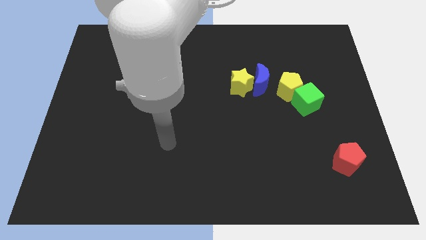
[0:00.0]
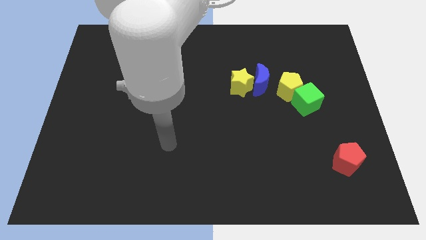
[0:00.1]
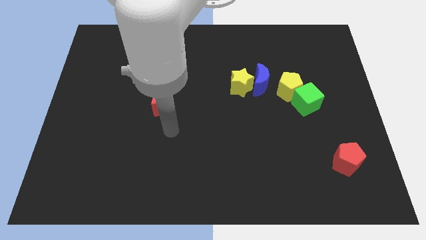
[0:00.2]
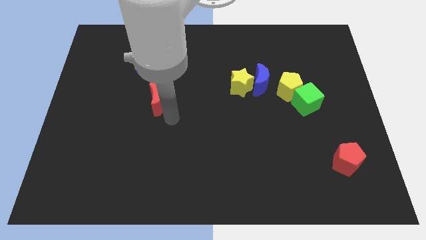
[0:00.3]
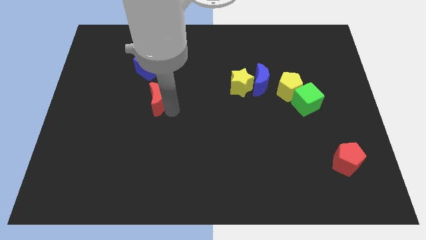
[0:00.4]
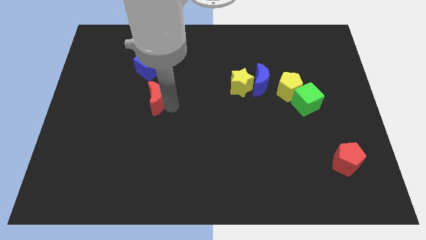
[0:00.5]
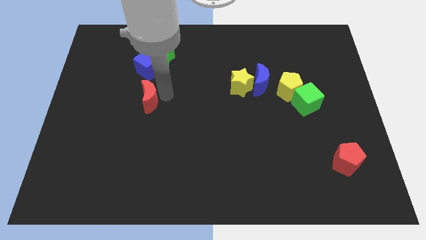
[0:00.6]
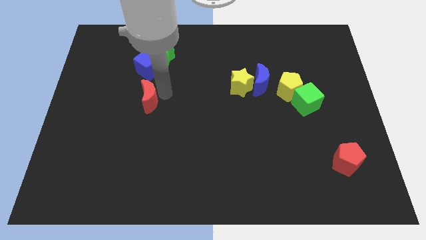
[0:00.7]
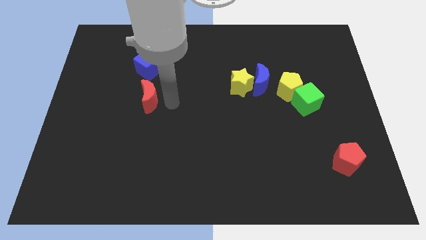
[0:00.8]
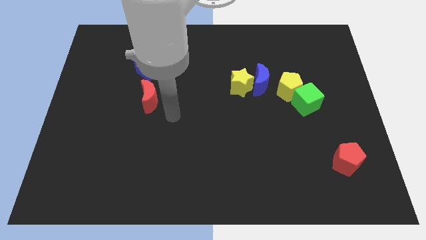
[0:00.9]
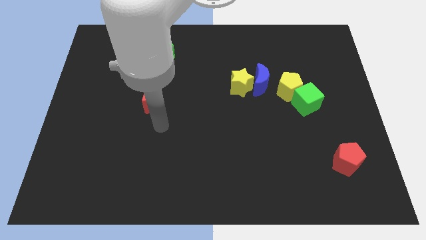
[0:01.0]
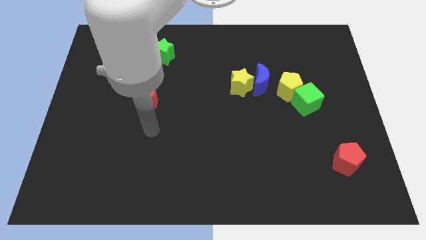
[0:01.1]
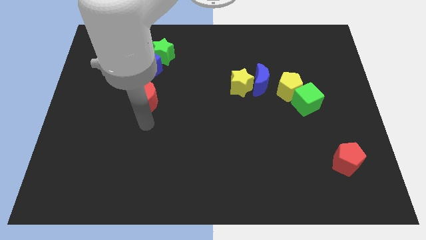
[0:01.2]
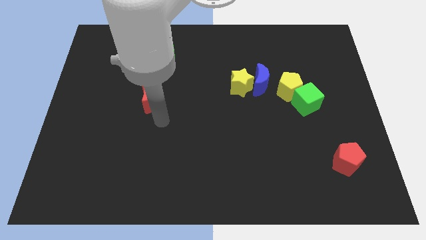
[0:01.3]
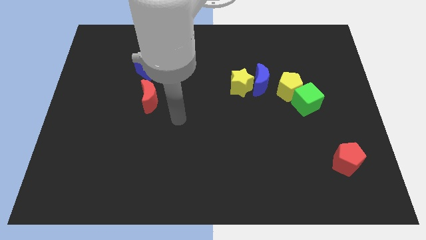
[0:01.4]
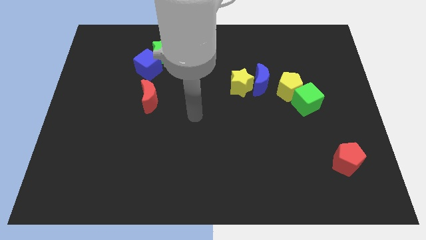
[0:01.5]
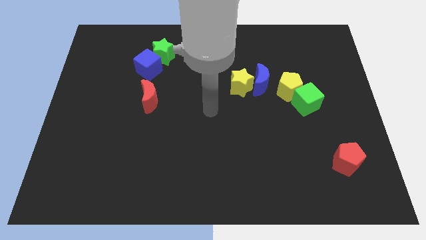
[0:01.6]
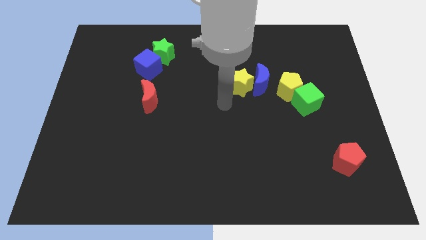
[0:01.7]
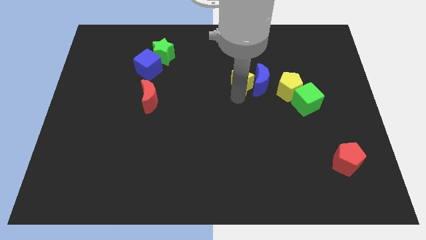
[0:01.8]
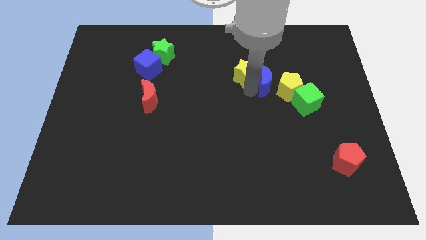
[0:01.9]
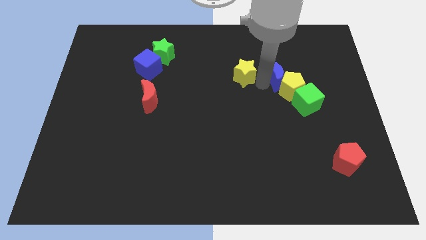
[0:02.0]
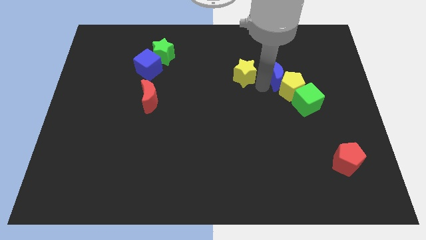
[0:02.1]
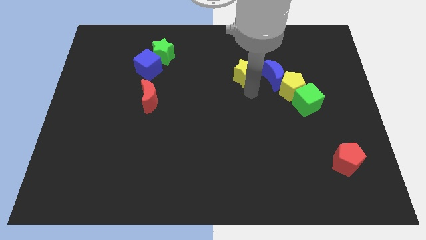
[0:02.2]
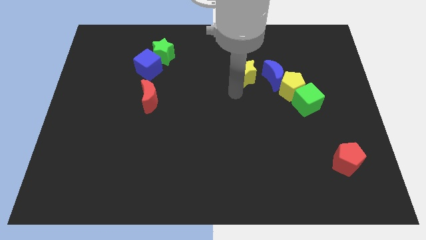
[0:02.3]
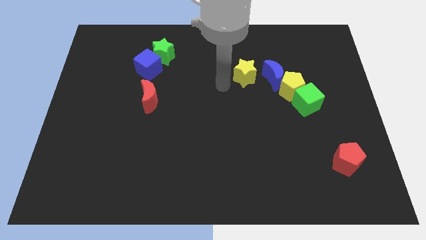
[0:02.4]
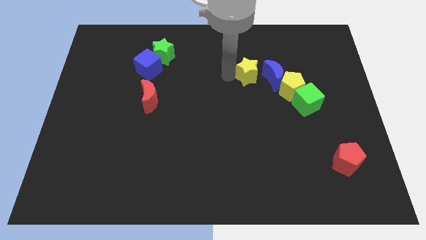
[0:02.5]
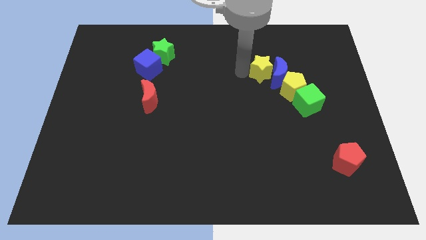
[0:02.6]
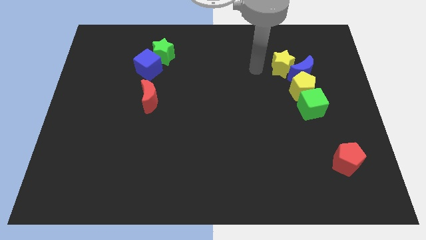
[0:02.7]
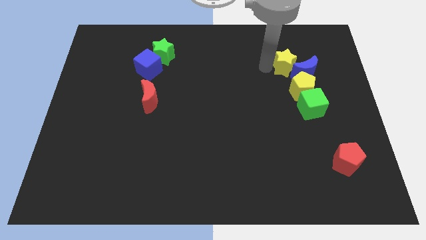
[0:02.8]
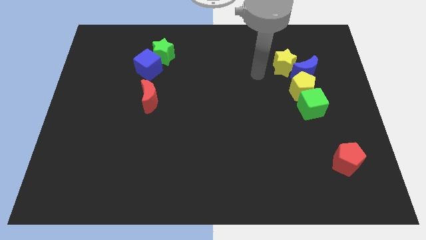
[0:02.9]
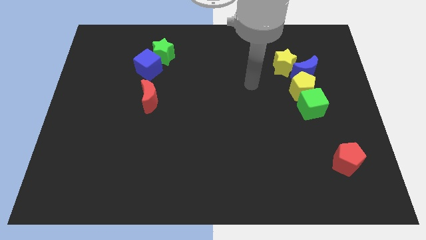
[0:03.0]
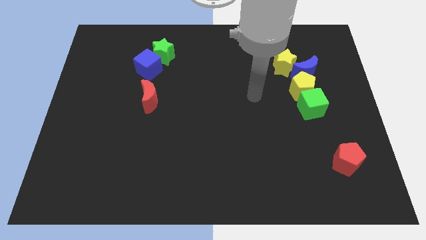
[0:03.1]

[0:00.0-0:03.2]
push the yellow star to the right side

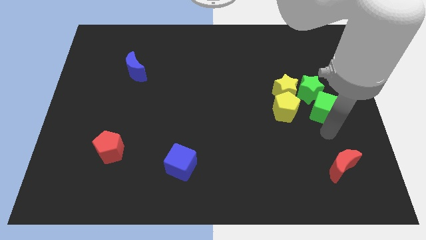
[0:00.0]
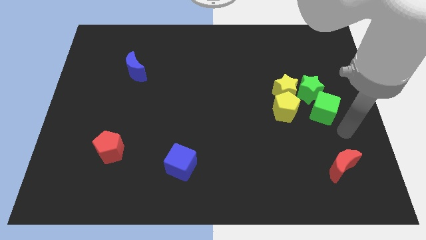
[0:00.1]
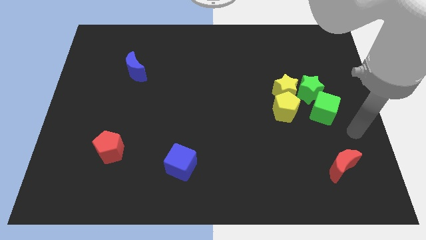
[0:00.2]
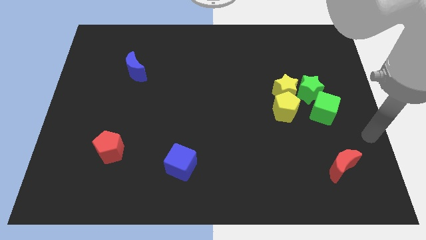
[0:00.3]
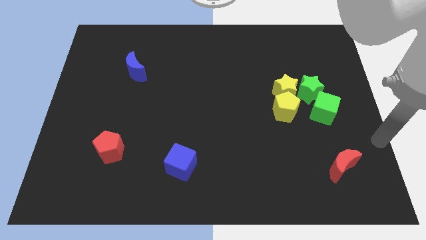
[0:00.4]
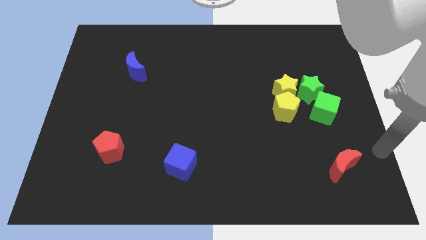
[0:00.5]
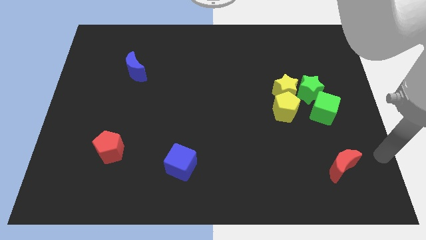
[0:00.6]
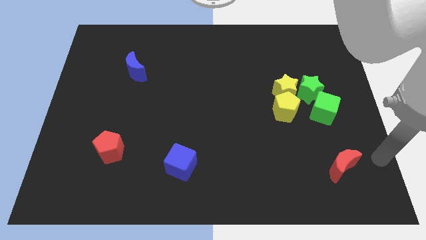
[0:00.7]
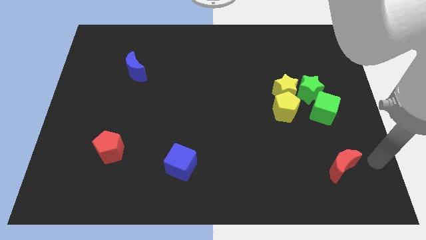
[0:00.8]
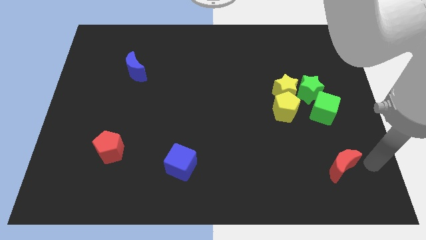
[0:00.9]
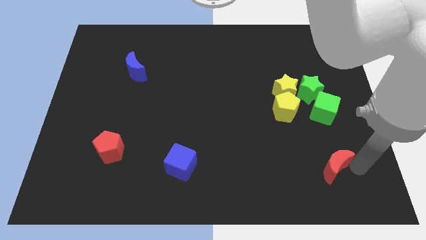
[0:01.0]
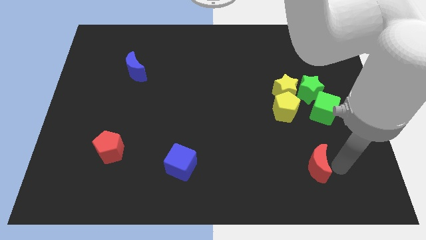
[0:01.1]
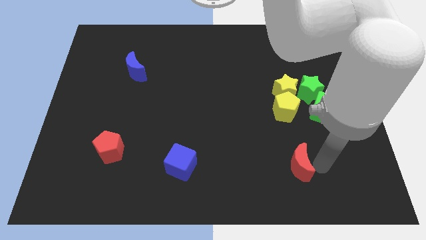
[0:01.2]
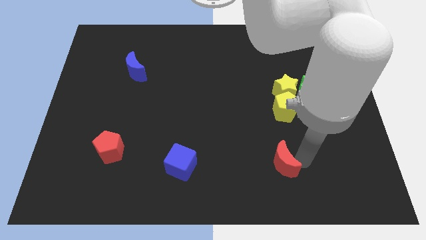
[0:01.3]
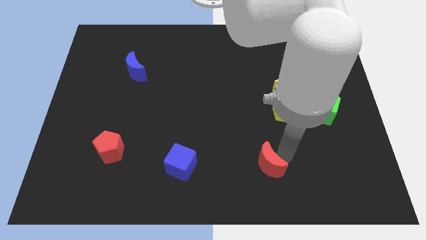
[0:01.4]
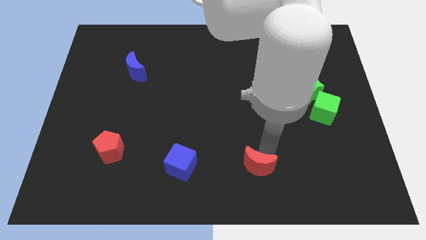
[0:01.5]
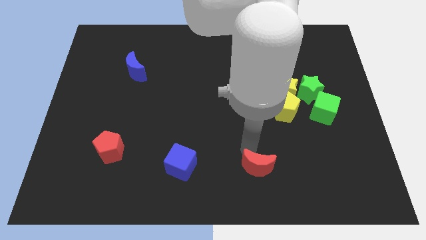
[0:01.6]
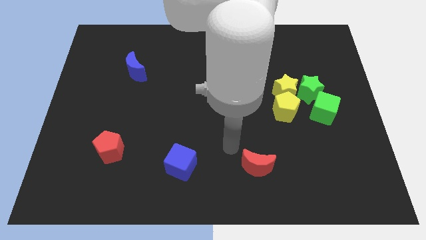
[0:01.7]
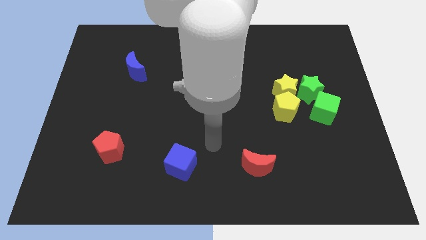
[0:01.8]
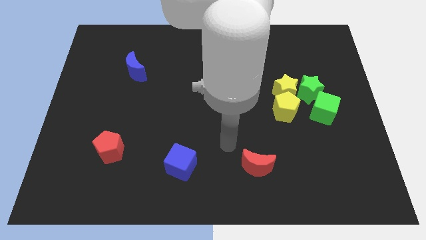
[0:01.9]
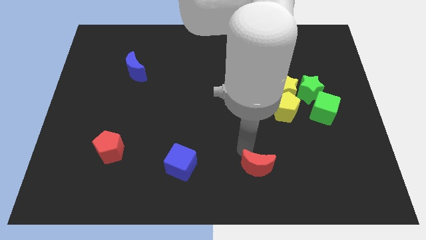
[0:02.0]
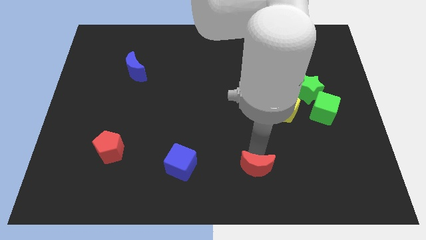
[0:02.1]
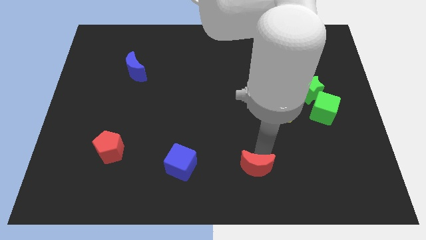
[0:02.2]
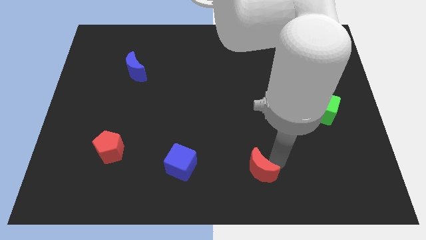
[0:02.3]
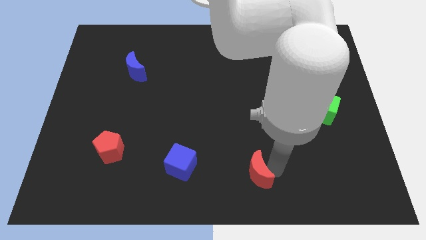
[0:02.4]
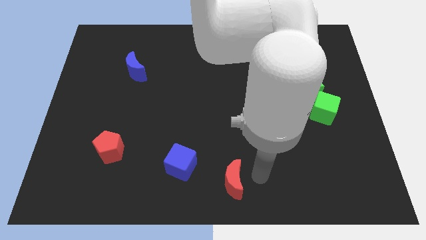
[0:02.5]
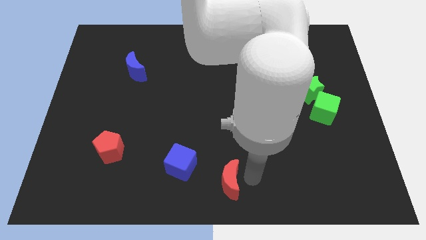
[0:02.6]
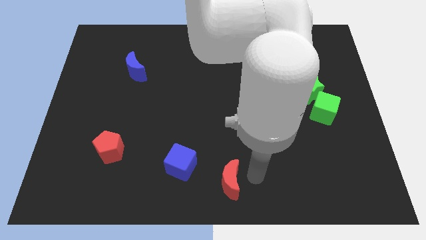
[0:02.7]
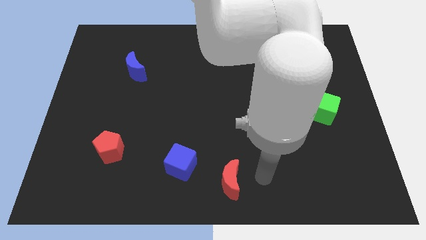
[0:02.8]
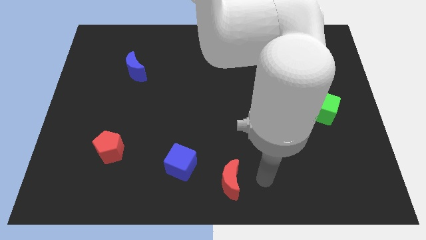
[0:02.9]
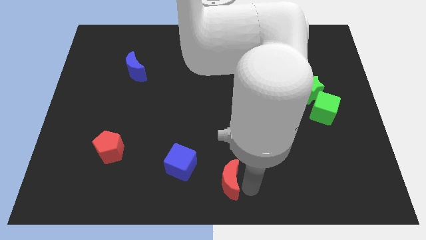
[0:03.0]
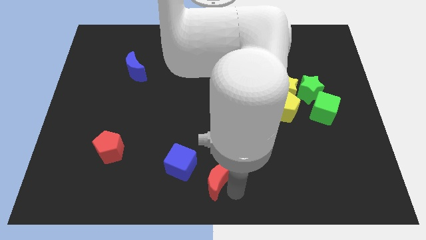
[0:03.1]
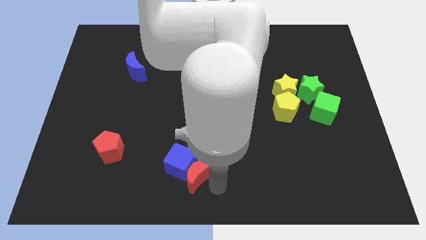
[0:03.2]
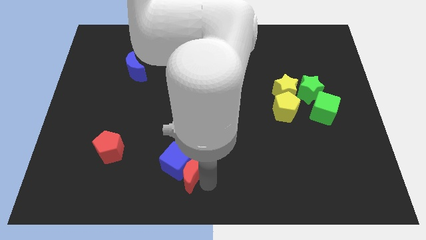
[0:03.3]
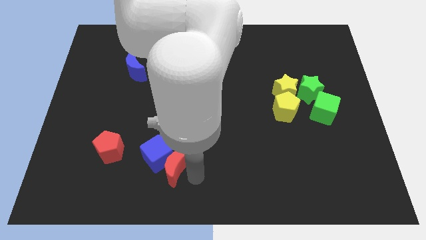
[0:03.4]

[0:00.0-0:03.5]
move the red crescent into the blue cube

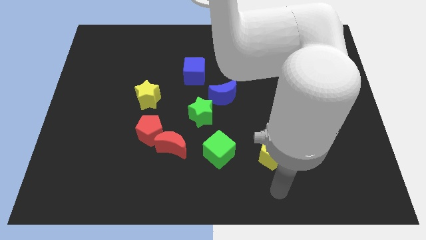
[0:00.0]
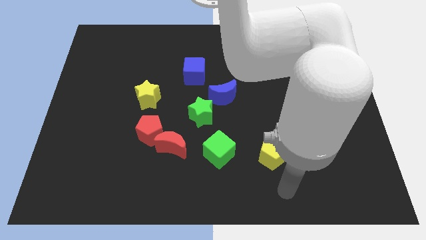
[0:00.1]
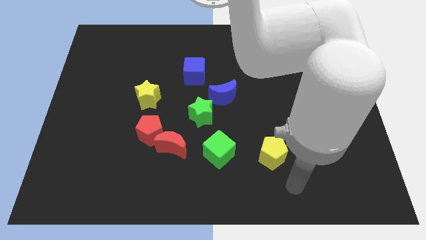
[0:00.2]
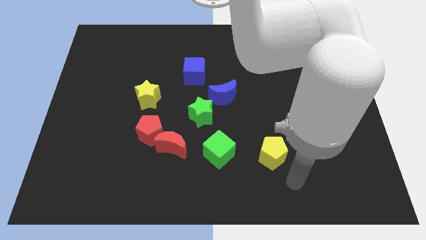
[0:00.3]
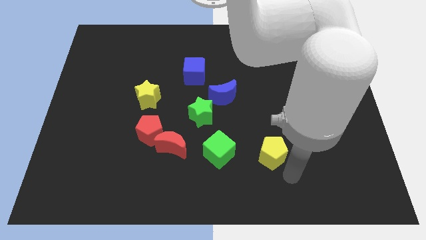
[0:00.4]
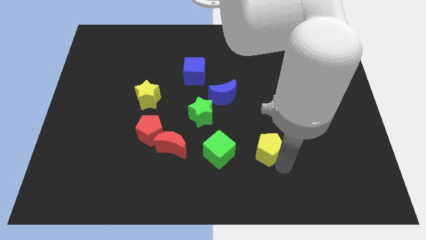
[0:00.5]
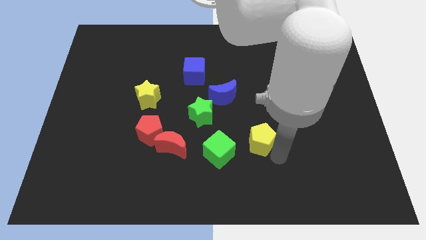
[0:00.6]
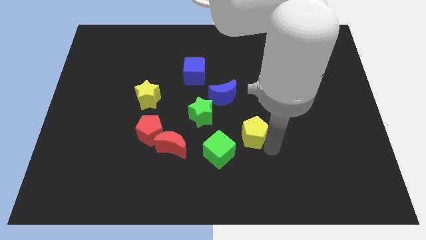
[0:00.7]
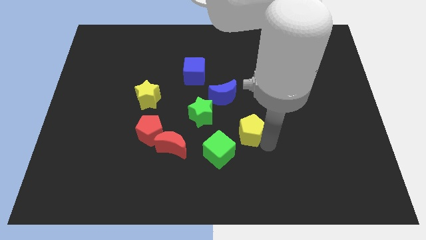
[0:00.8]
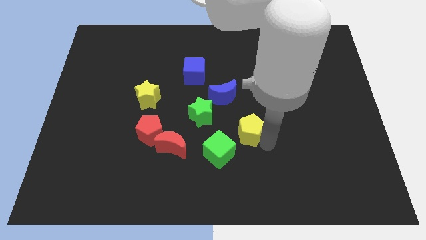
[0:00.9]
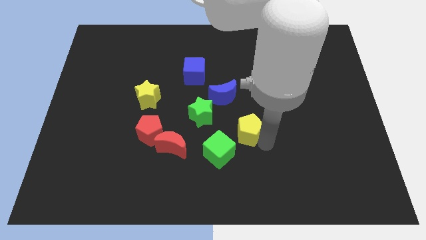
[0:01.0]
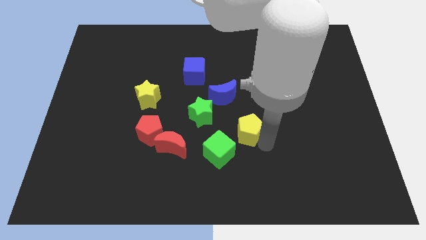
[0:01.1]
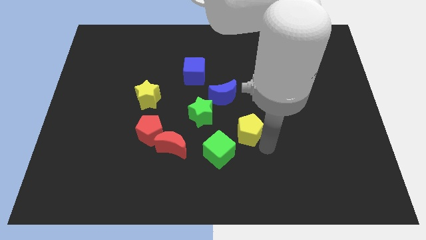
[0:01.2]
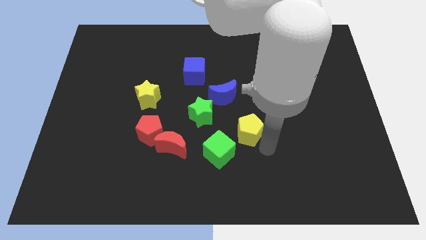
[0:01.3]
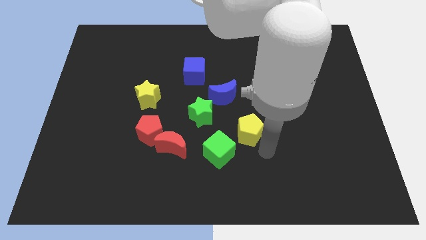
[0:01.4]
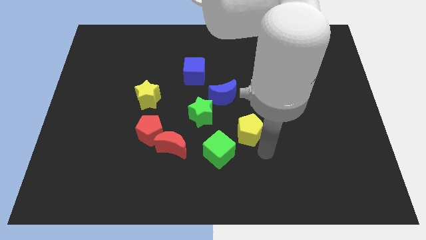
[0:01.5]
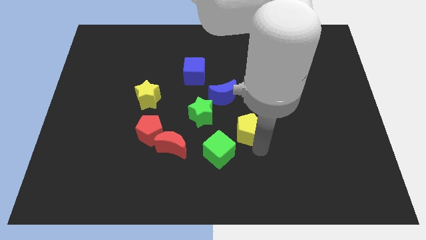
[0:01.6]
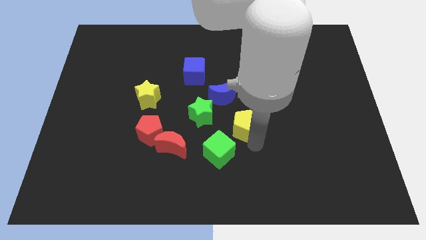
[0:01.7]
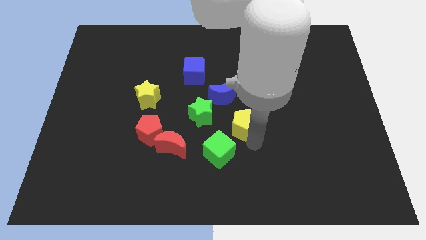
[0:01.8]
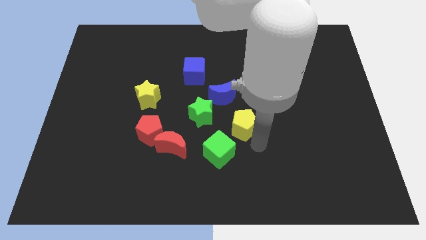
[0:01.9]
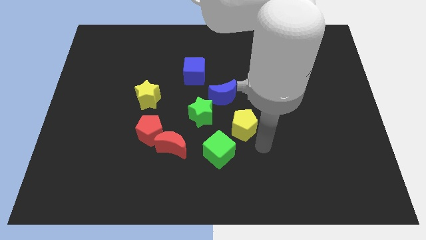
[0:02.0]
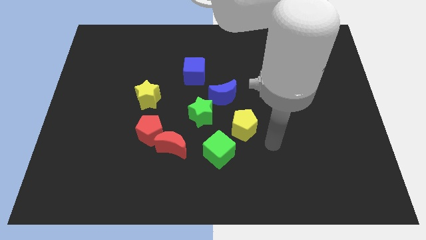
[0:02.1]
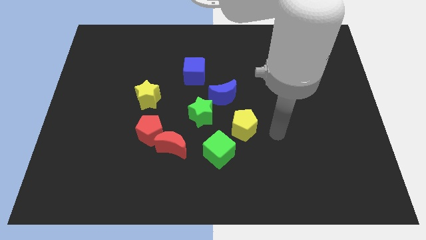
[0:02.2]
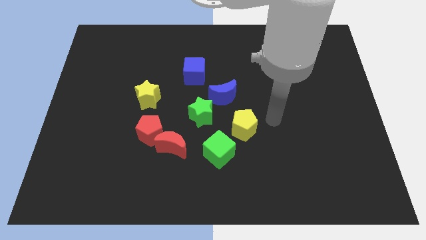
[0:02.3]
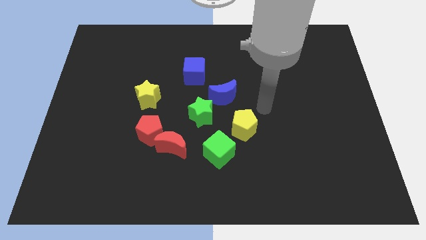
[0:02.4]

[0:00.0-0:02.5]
place the yellow pentagon above the green cube
